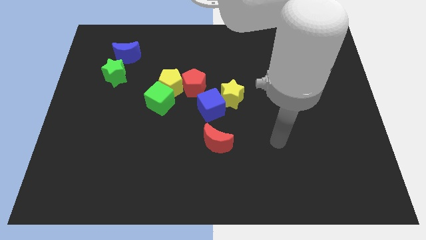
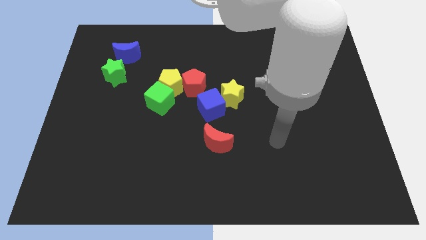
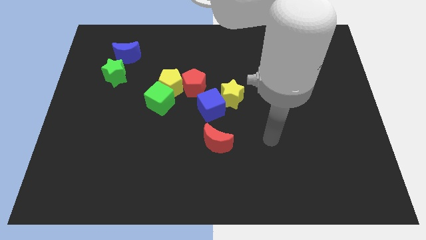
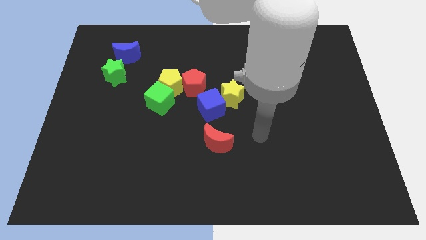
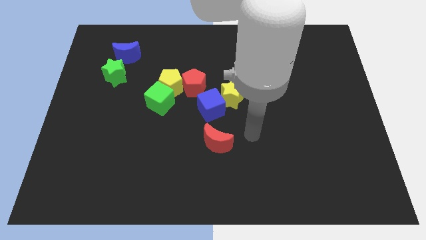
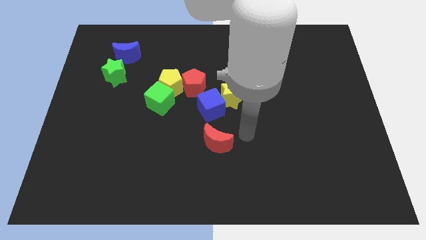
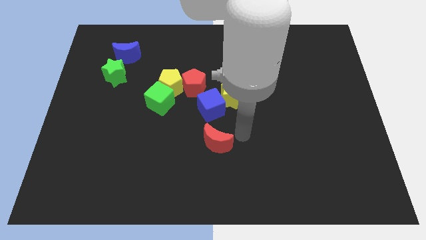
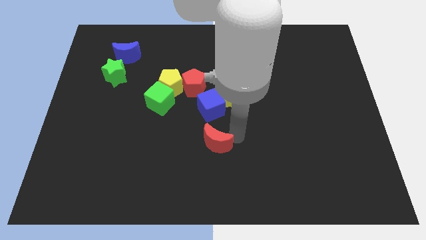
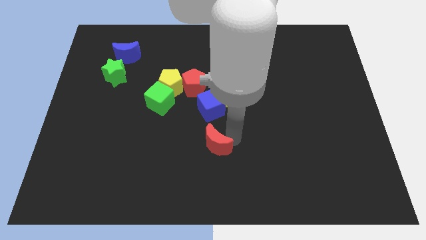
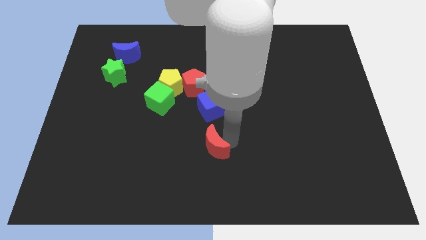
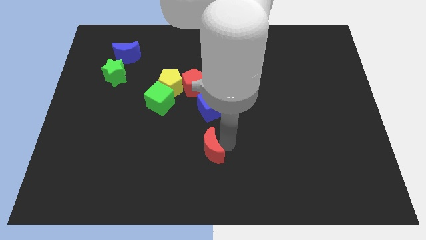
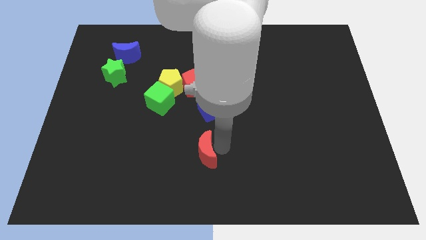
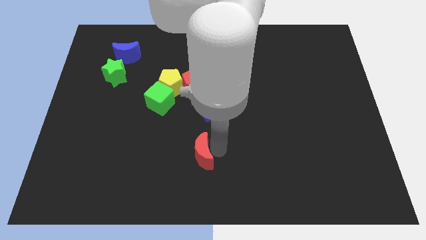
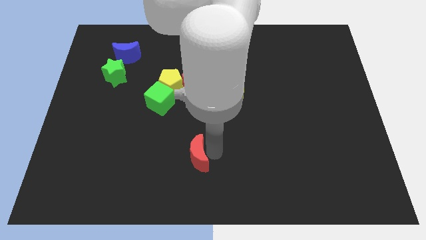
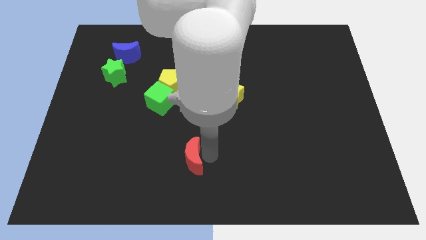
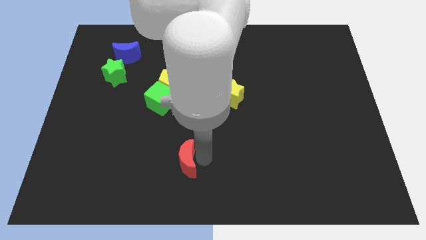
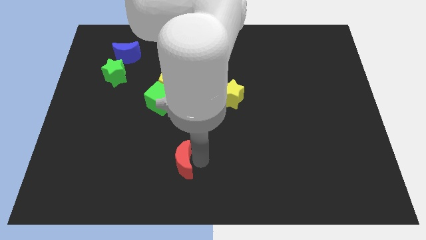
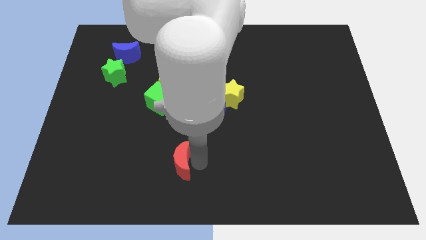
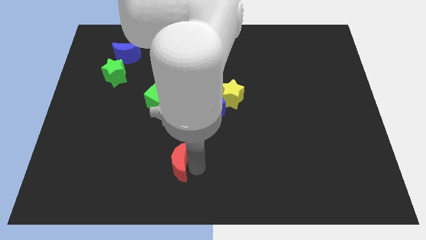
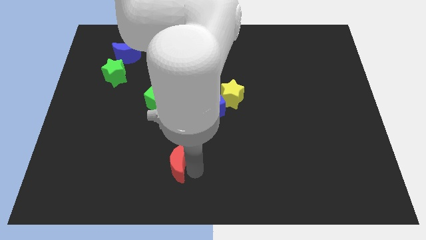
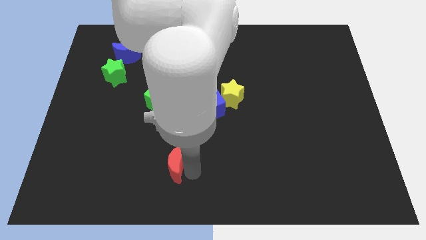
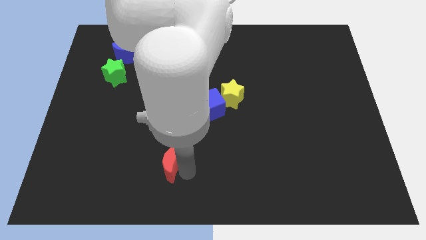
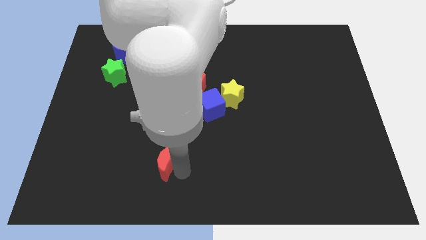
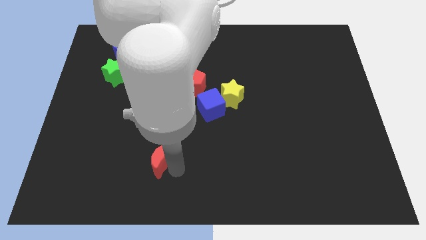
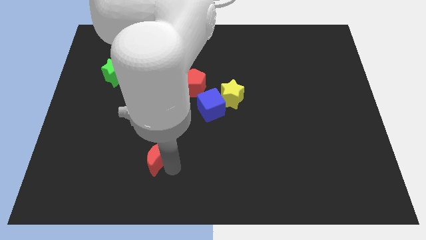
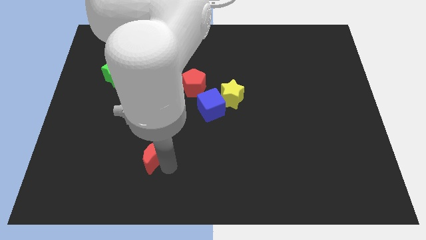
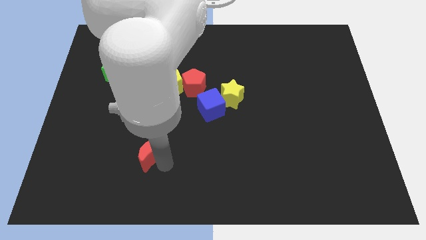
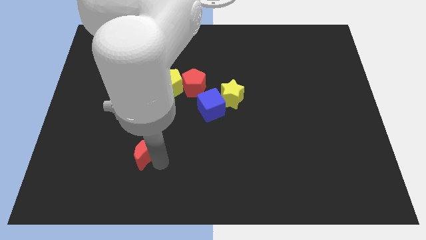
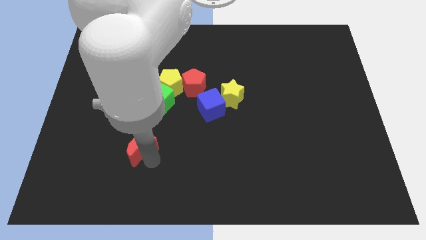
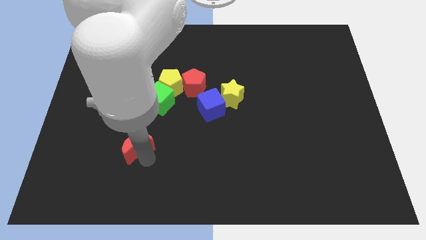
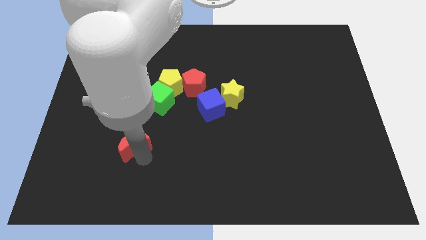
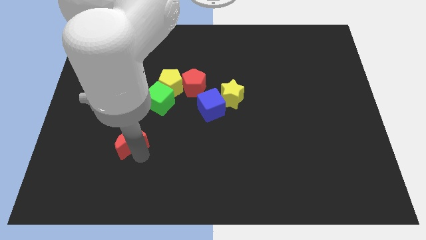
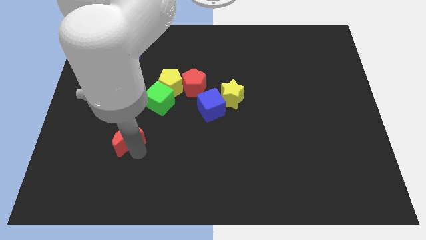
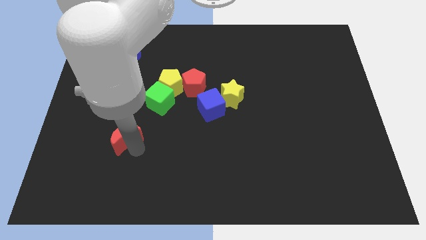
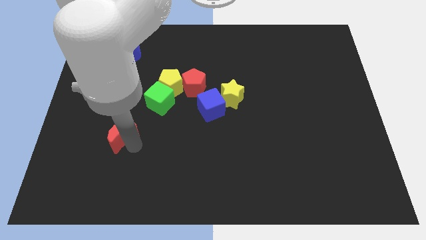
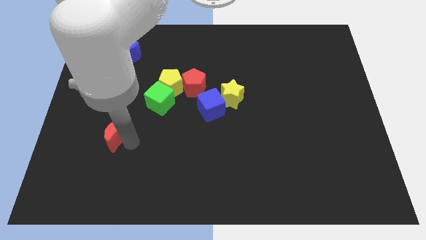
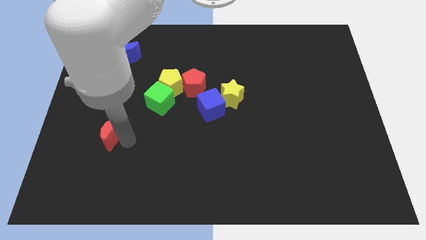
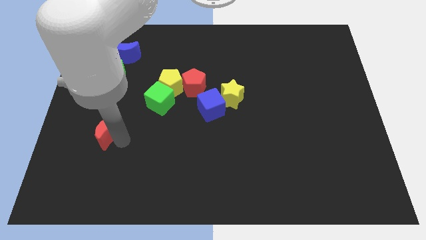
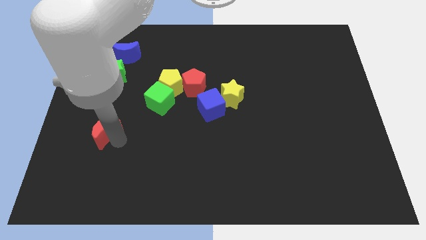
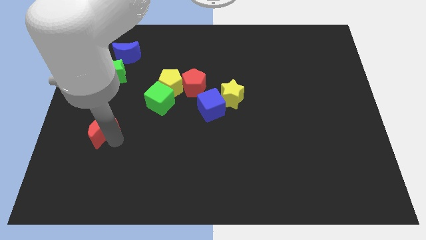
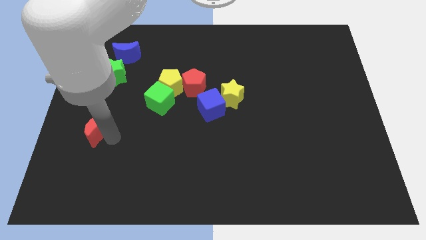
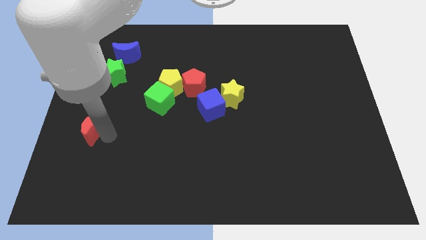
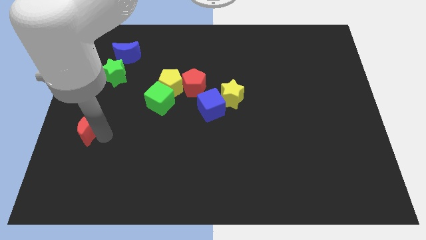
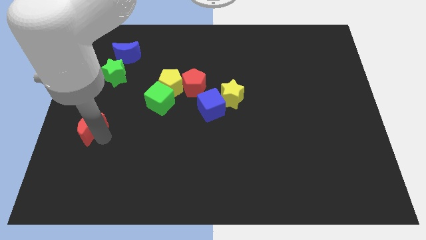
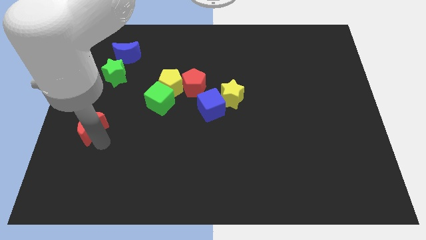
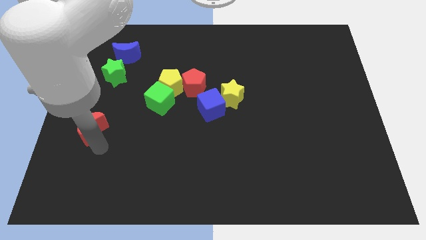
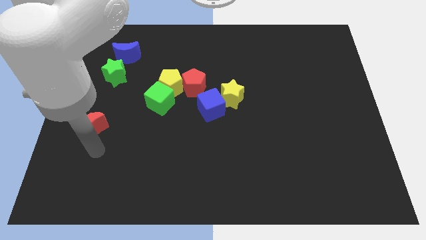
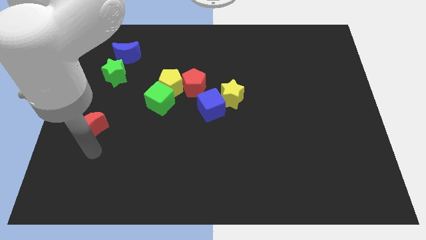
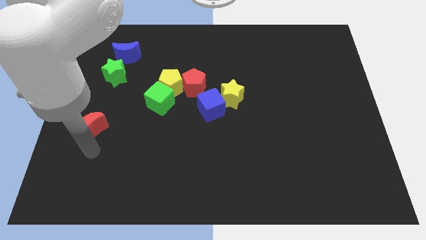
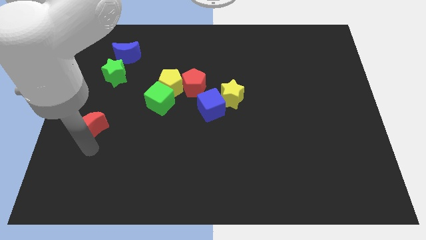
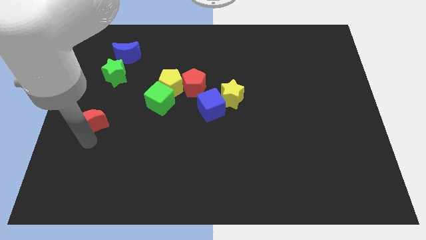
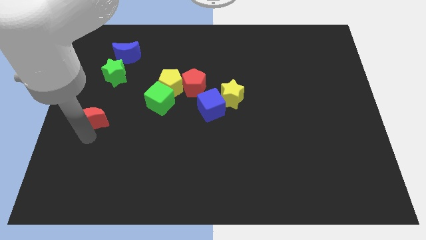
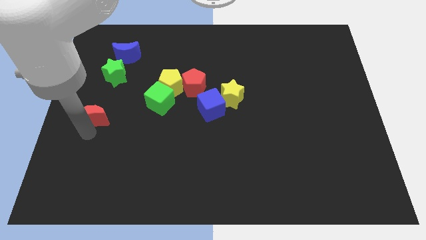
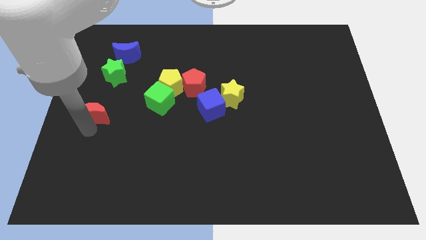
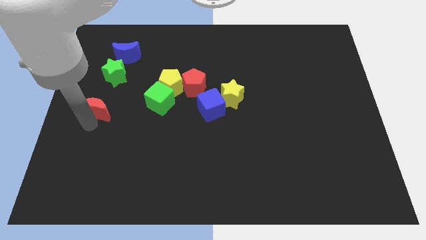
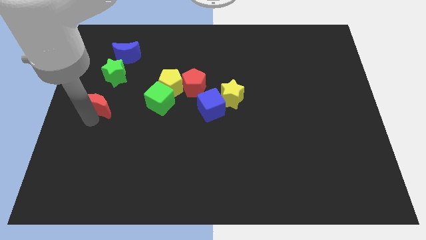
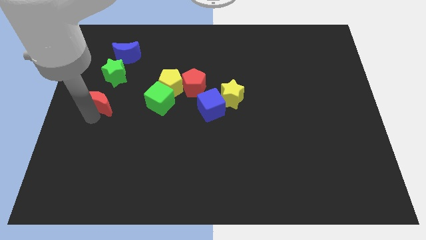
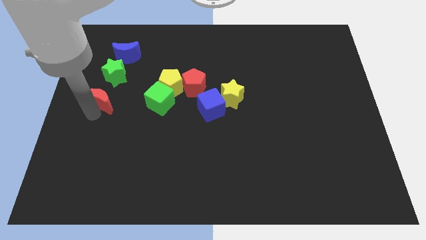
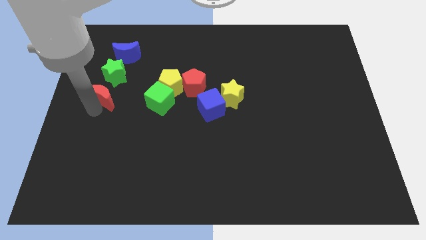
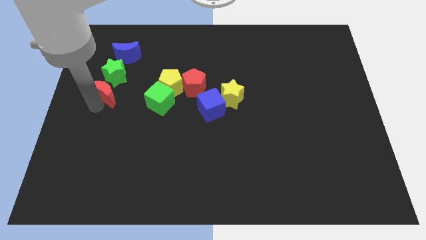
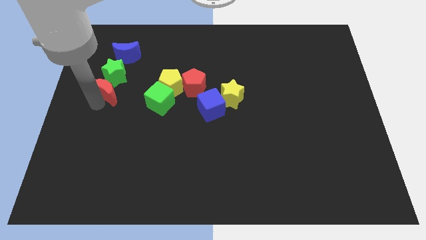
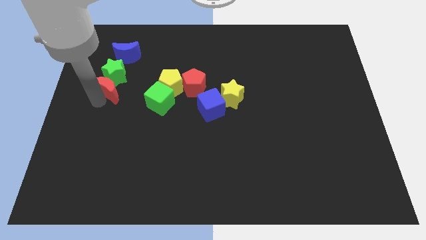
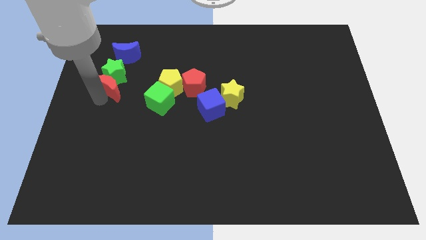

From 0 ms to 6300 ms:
slide the red moon close to the green star

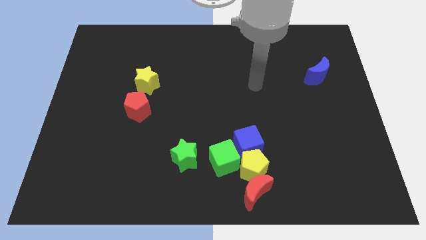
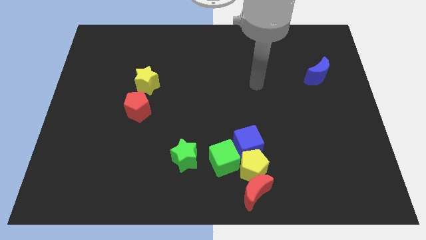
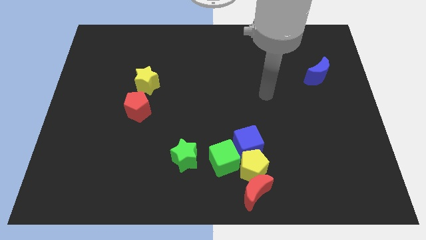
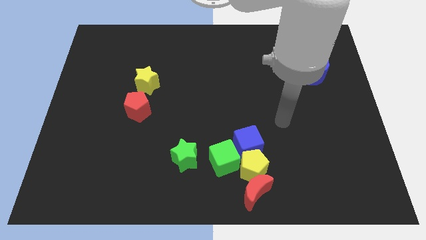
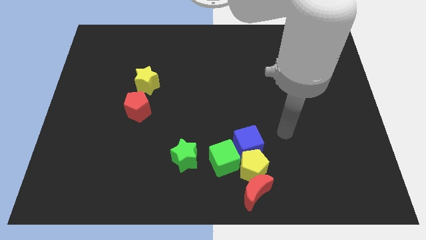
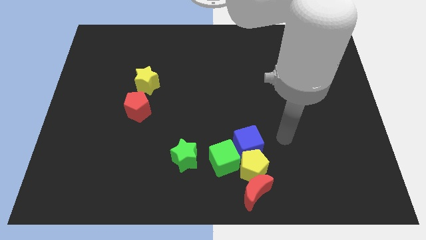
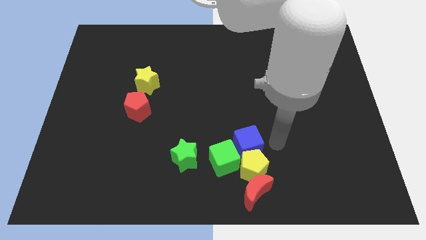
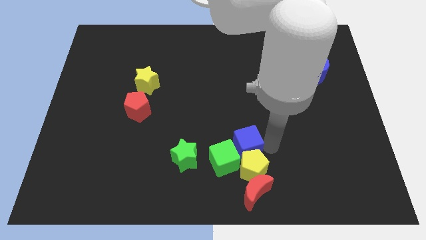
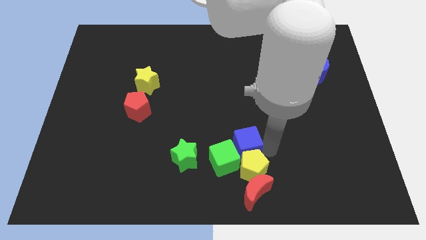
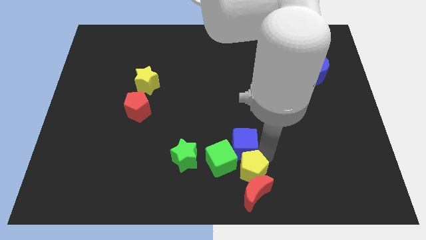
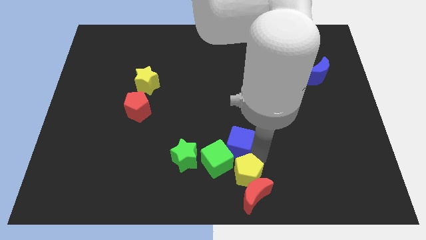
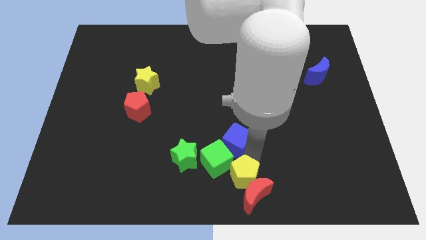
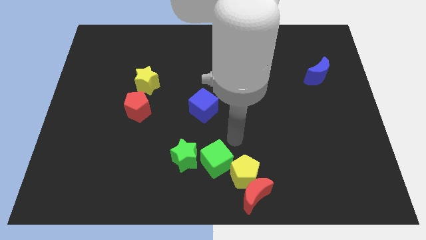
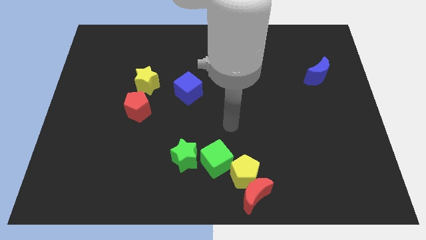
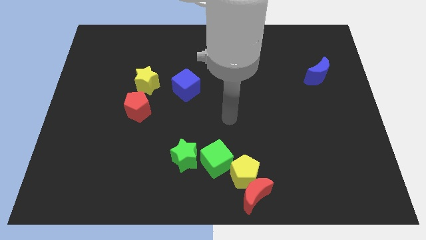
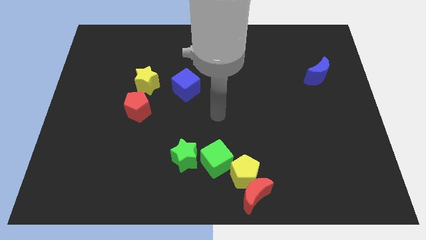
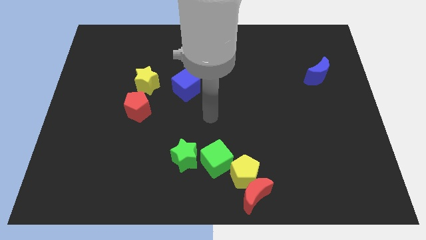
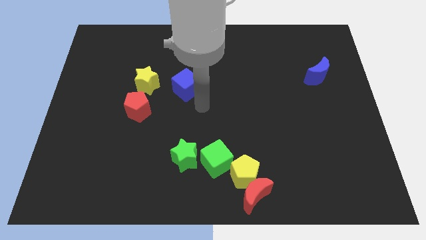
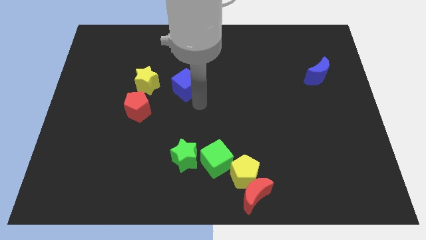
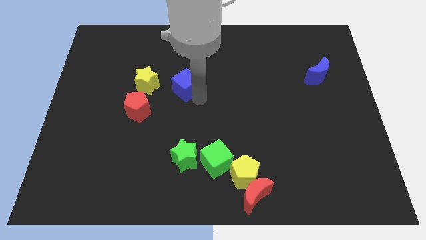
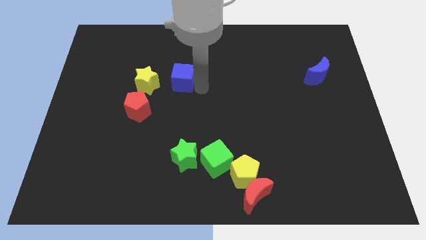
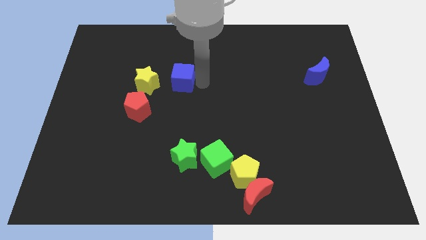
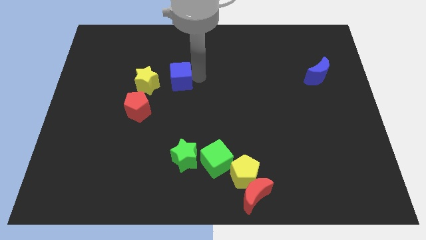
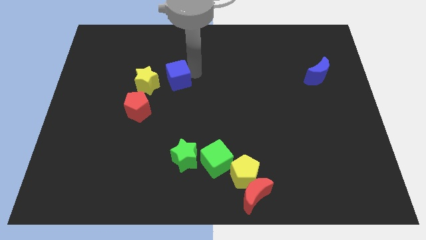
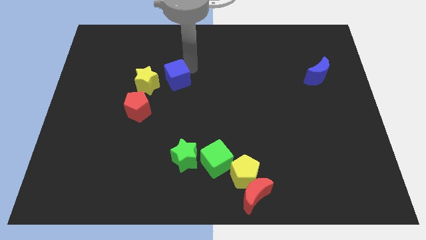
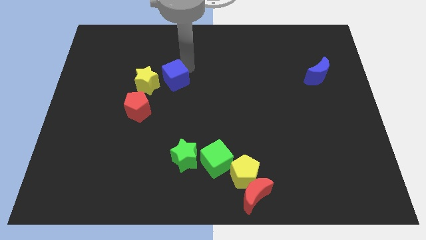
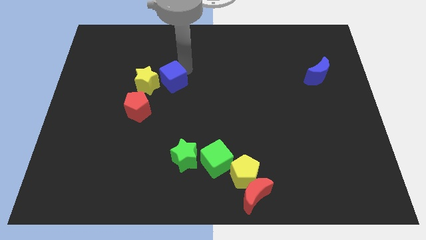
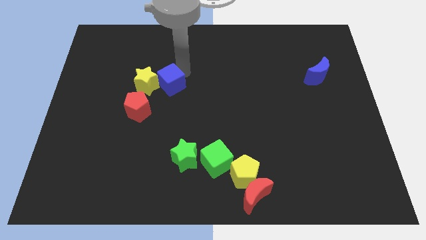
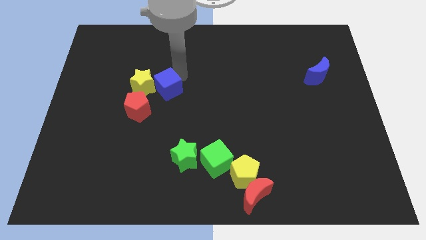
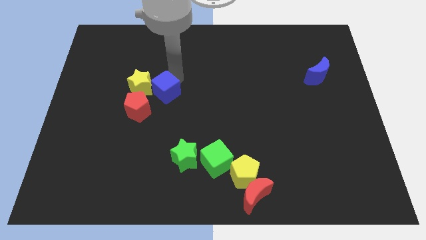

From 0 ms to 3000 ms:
slide the blue cube next to the yellow star
